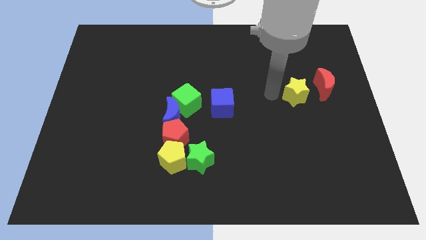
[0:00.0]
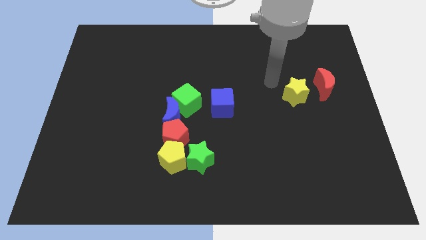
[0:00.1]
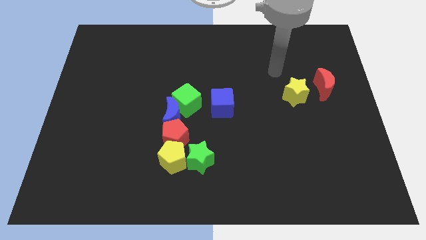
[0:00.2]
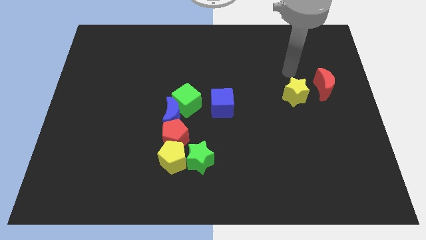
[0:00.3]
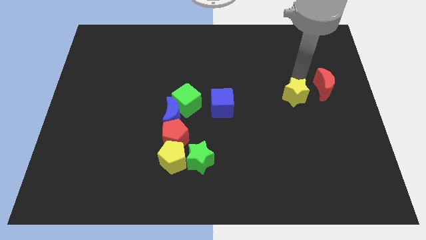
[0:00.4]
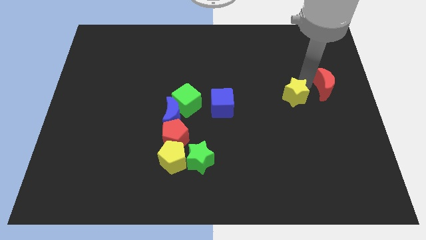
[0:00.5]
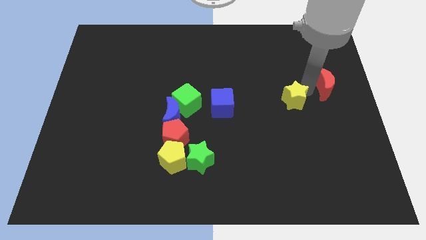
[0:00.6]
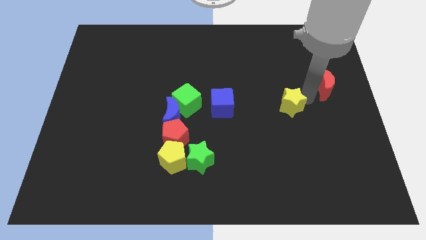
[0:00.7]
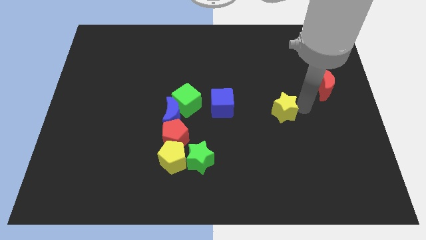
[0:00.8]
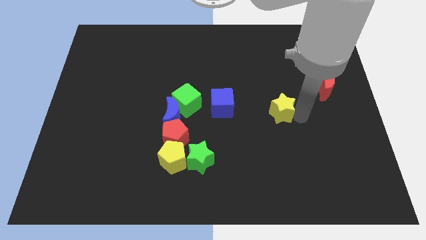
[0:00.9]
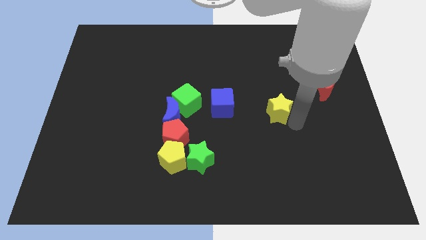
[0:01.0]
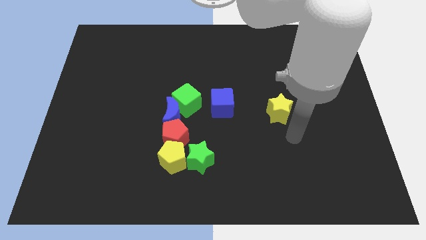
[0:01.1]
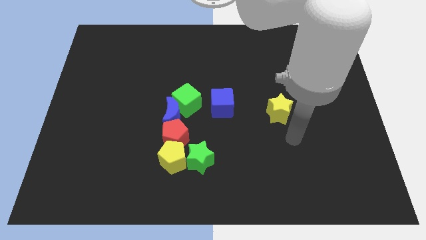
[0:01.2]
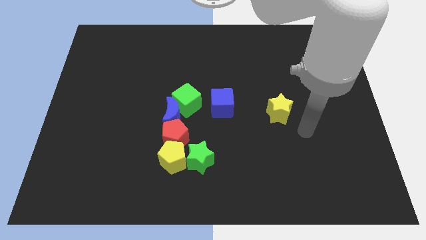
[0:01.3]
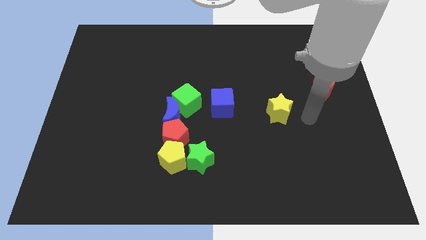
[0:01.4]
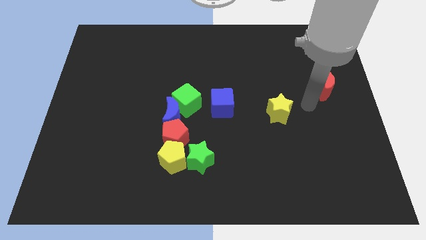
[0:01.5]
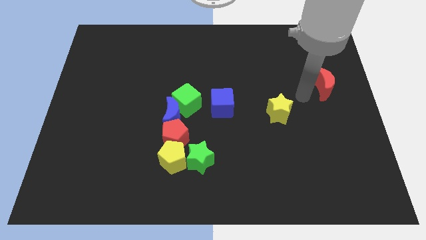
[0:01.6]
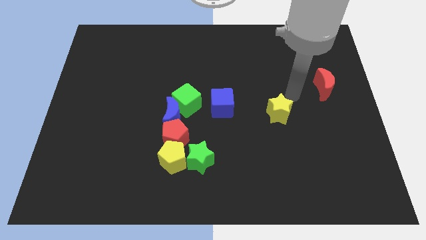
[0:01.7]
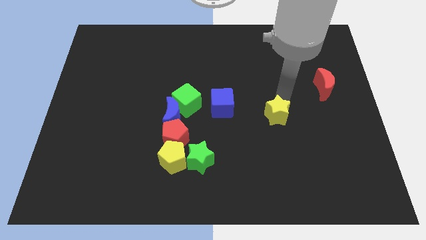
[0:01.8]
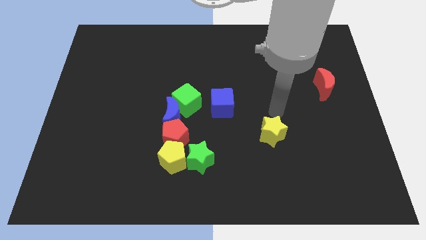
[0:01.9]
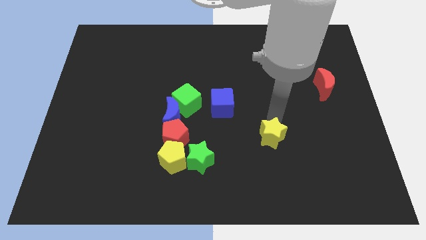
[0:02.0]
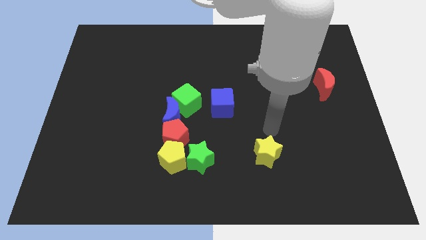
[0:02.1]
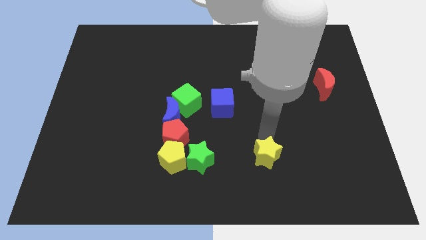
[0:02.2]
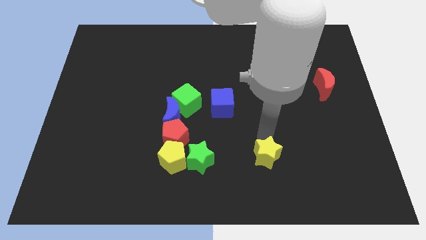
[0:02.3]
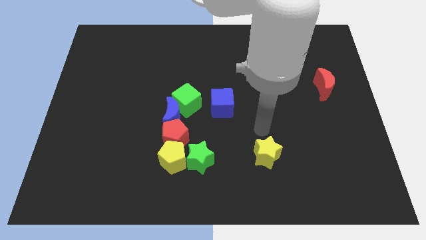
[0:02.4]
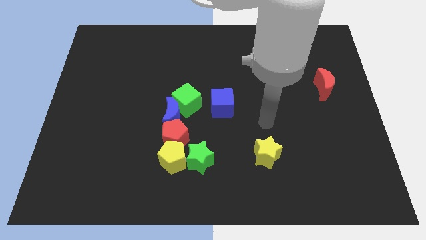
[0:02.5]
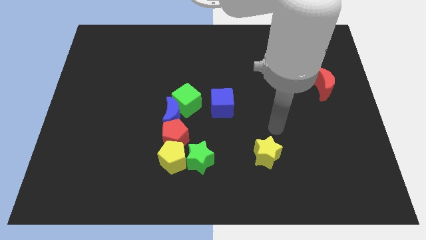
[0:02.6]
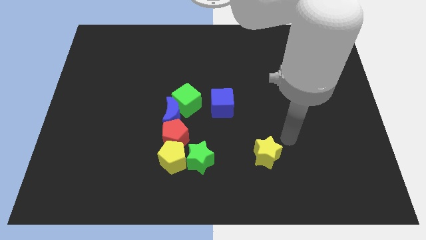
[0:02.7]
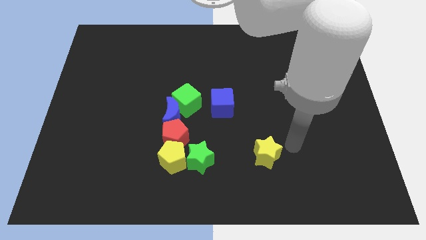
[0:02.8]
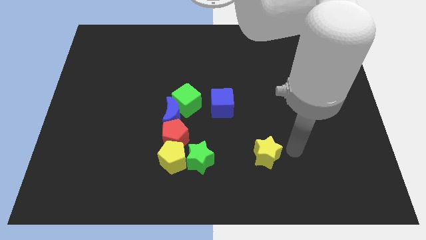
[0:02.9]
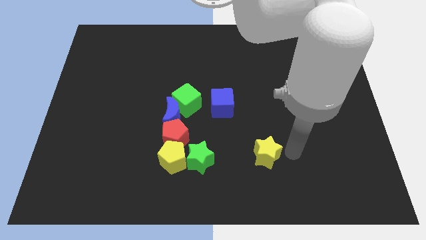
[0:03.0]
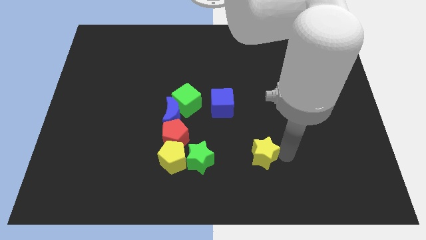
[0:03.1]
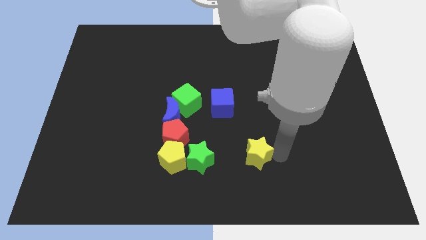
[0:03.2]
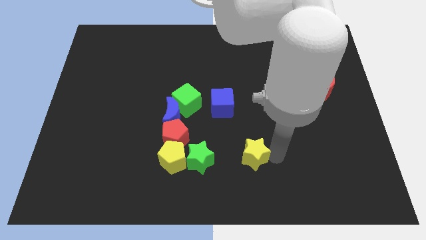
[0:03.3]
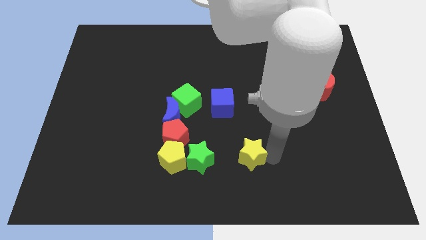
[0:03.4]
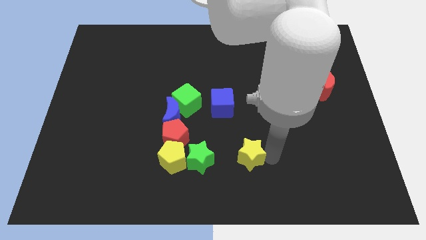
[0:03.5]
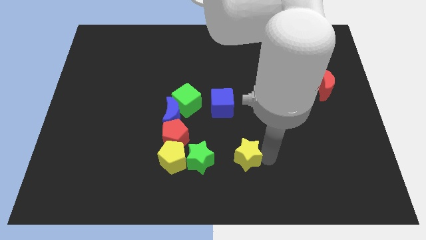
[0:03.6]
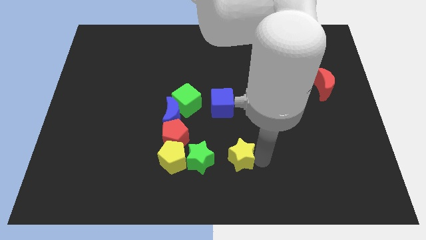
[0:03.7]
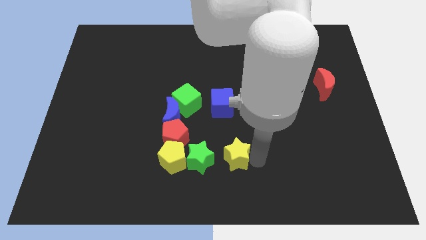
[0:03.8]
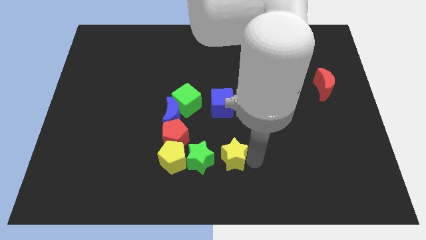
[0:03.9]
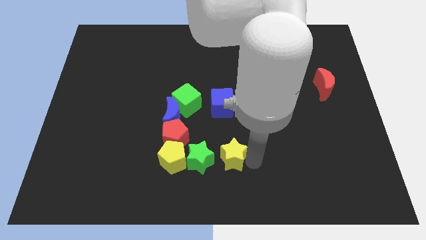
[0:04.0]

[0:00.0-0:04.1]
add yellow star to the right of green star

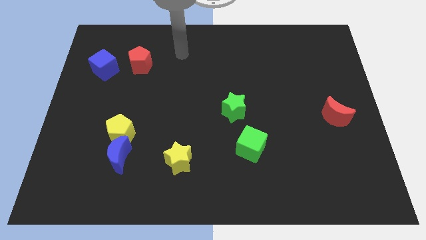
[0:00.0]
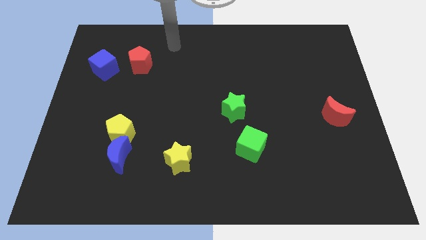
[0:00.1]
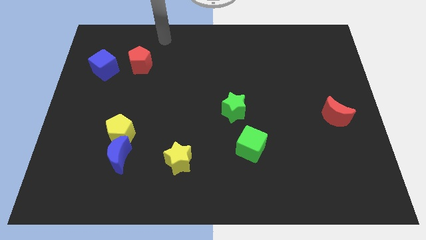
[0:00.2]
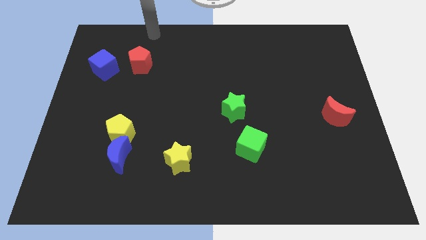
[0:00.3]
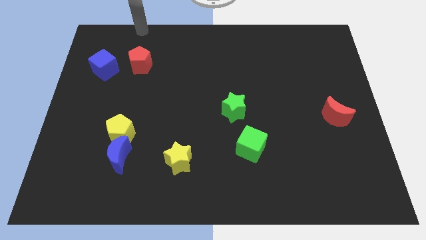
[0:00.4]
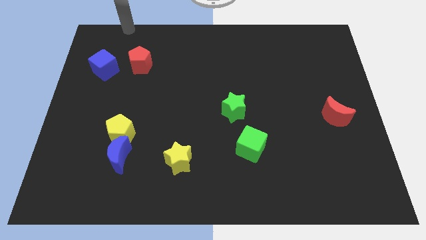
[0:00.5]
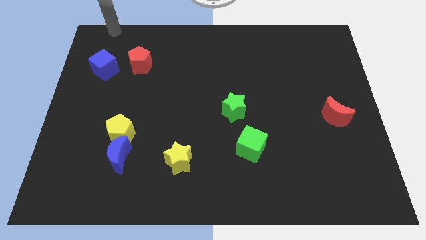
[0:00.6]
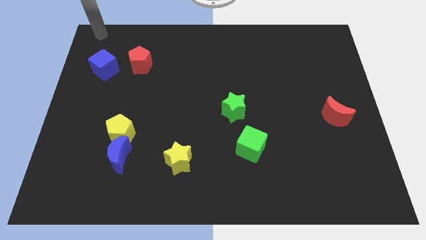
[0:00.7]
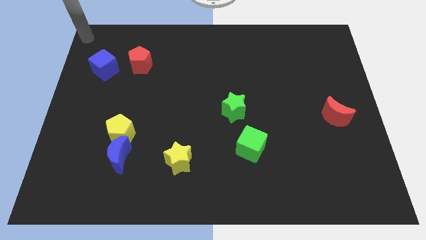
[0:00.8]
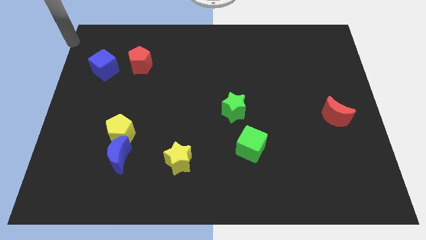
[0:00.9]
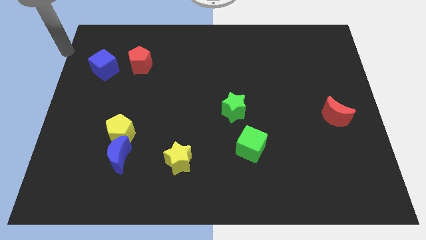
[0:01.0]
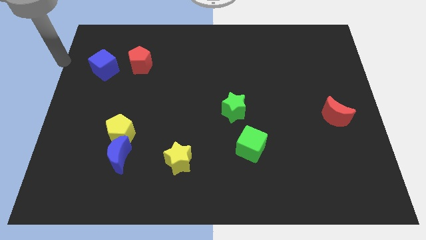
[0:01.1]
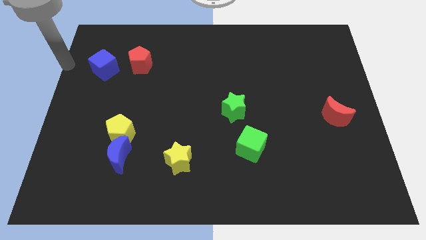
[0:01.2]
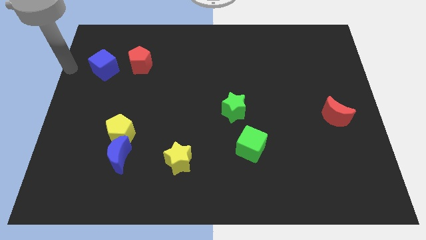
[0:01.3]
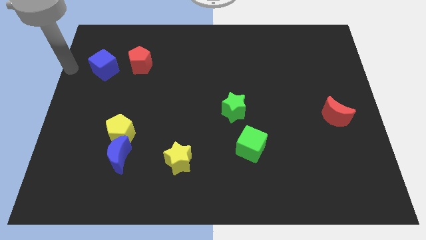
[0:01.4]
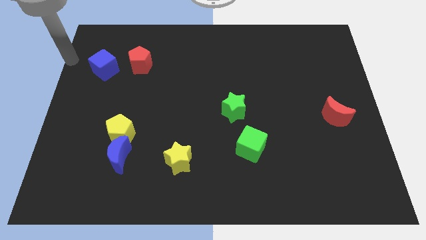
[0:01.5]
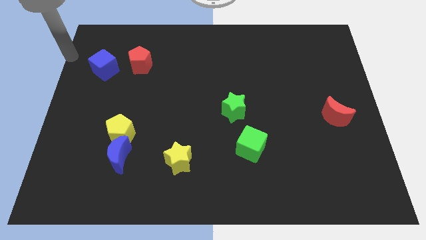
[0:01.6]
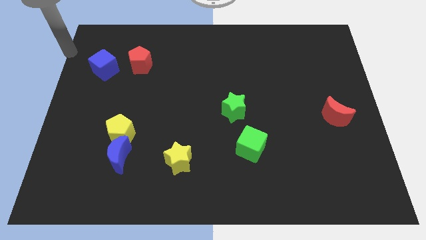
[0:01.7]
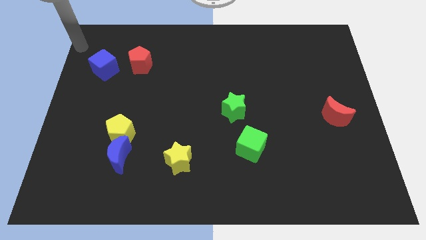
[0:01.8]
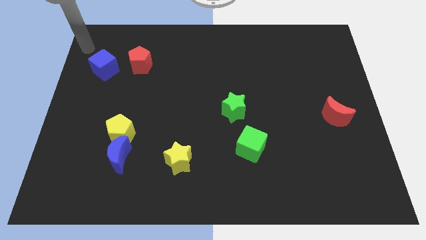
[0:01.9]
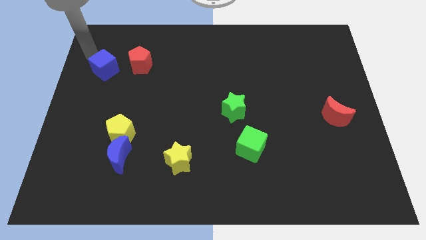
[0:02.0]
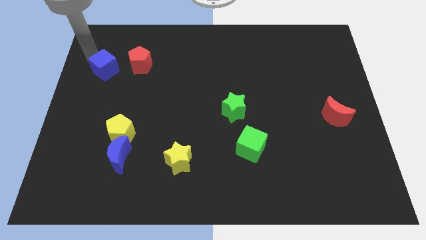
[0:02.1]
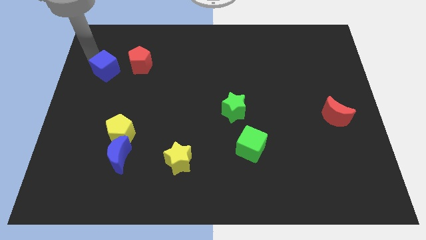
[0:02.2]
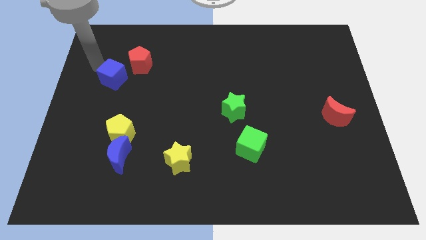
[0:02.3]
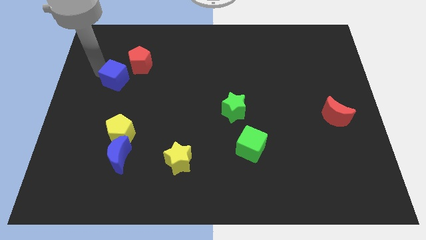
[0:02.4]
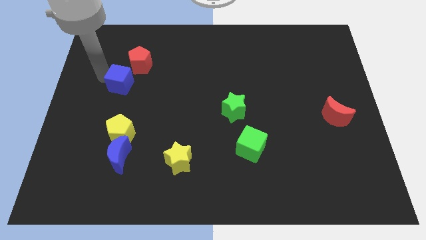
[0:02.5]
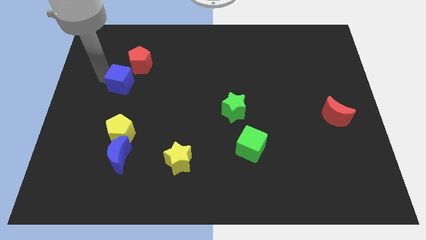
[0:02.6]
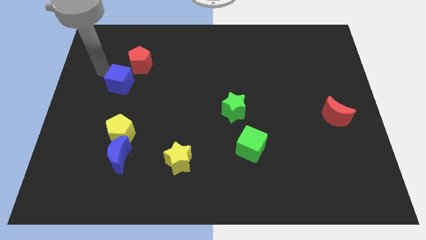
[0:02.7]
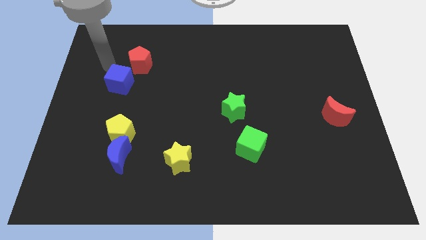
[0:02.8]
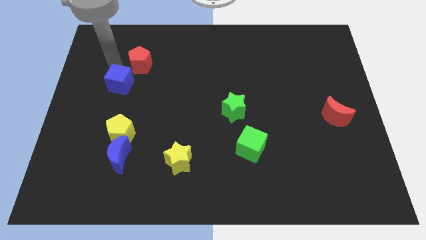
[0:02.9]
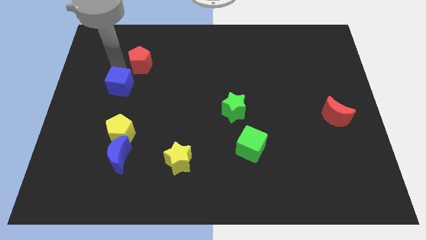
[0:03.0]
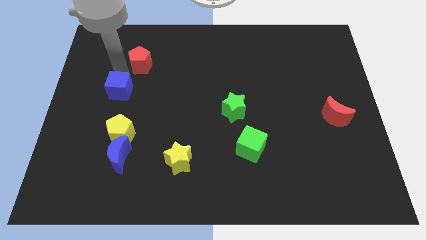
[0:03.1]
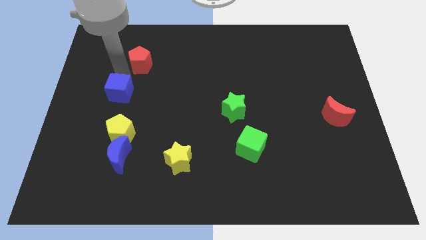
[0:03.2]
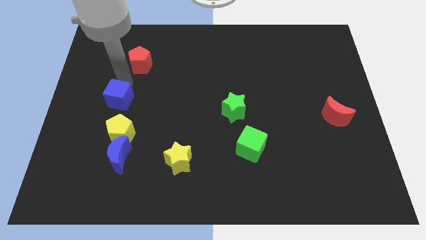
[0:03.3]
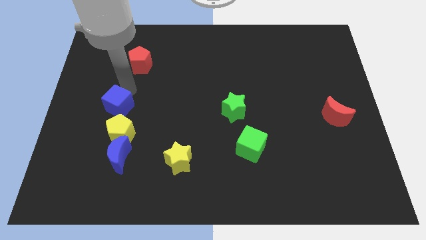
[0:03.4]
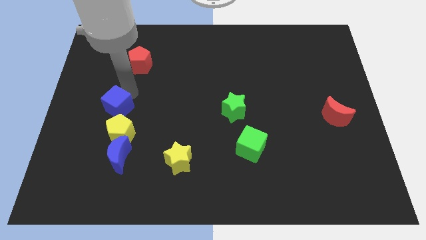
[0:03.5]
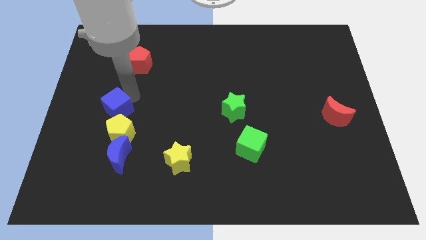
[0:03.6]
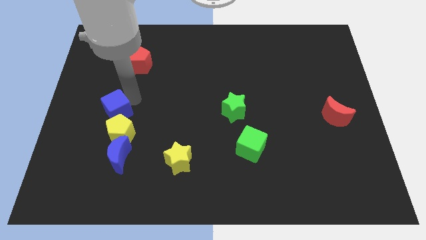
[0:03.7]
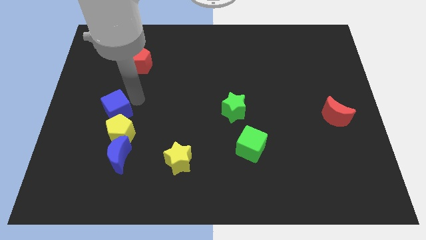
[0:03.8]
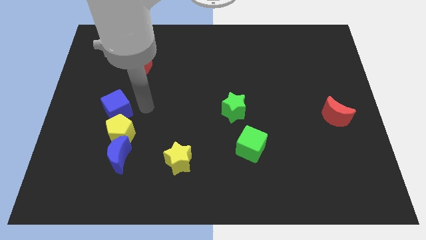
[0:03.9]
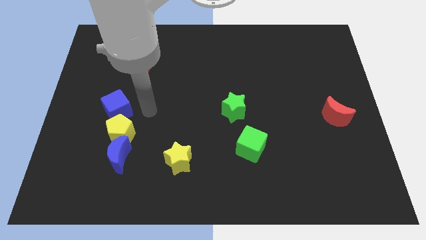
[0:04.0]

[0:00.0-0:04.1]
place the blue cube above the yellow pentagon

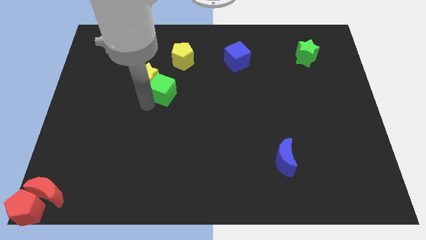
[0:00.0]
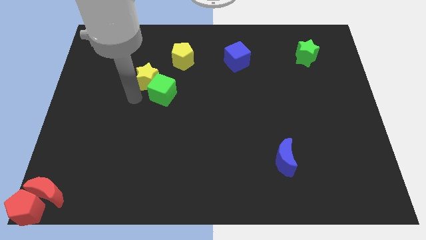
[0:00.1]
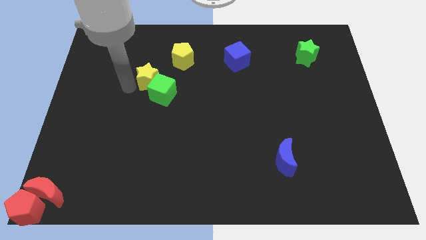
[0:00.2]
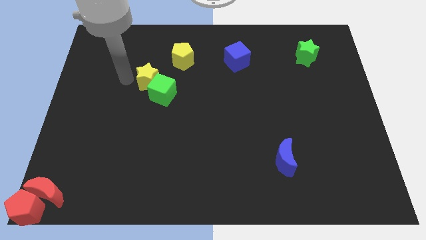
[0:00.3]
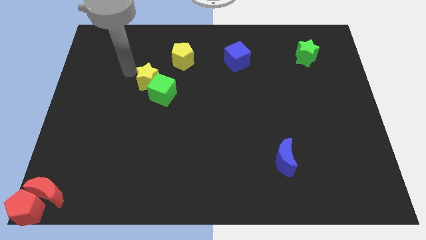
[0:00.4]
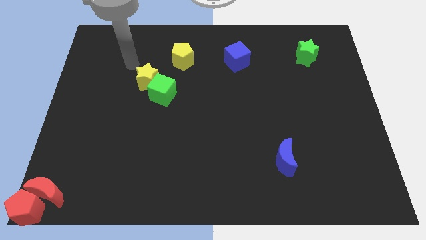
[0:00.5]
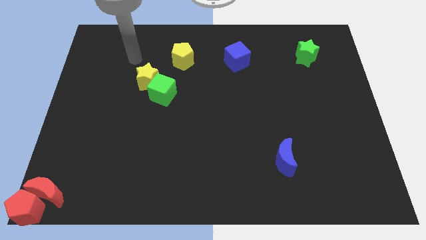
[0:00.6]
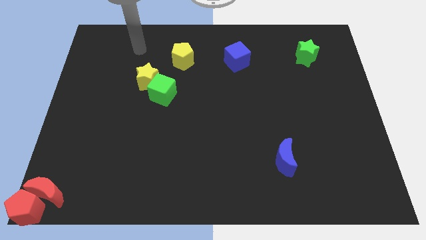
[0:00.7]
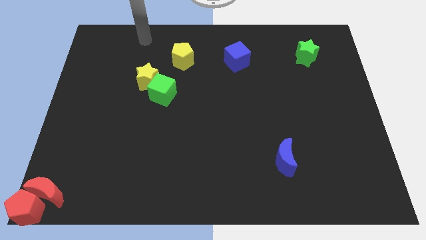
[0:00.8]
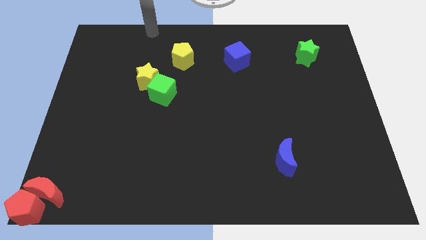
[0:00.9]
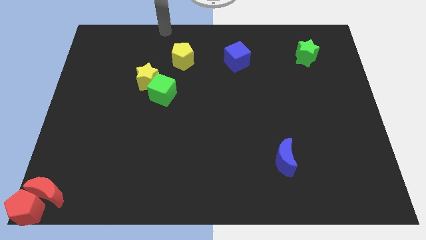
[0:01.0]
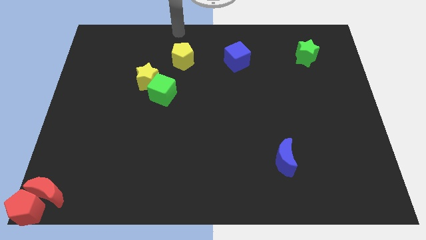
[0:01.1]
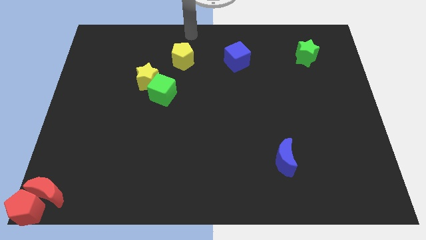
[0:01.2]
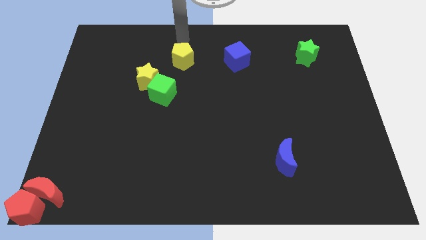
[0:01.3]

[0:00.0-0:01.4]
place your arm at the top of yellow pentagon
